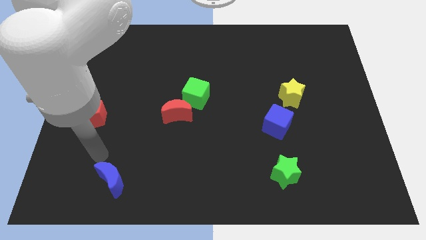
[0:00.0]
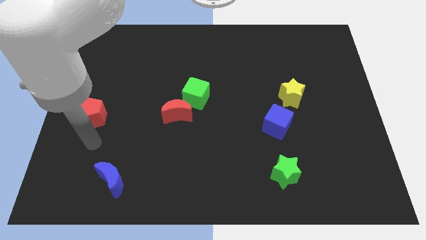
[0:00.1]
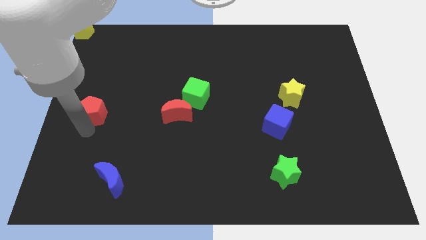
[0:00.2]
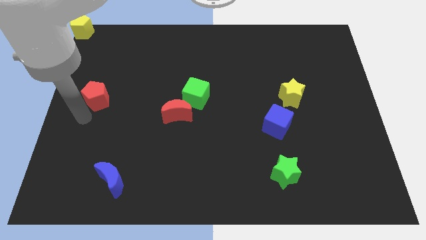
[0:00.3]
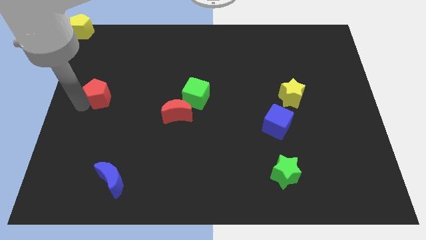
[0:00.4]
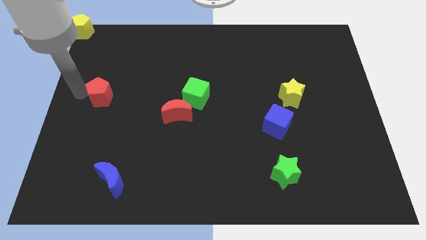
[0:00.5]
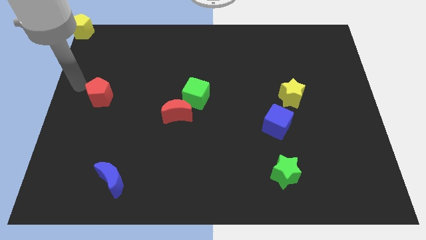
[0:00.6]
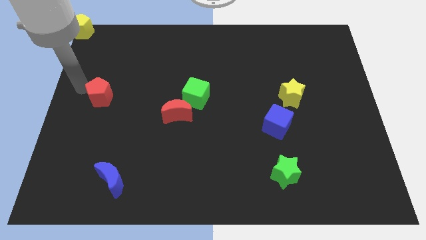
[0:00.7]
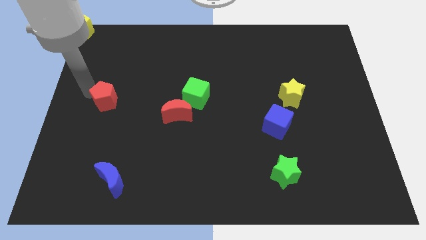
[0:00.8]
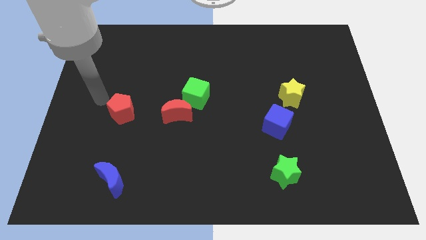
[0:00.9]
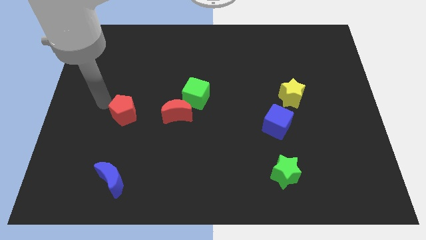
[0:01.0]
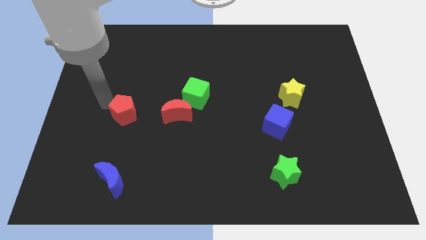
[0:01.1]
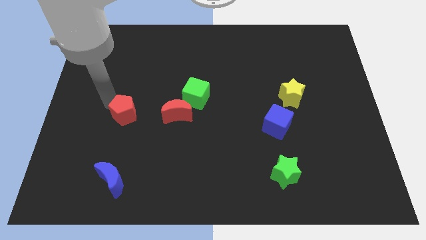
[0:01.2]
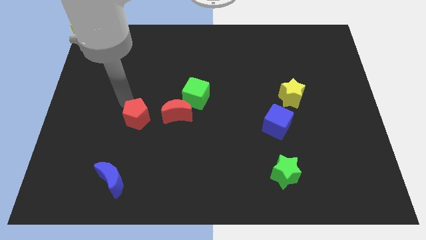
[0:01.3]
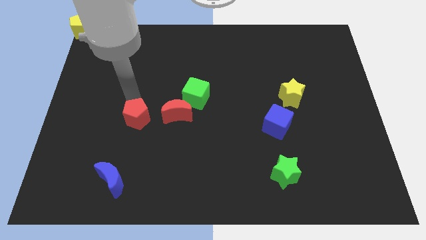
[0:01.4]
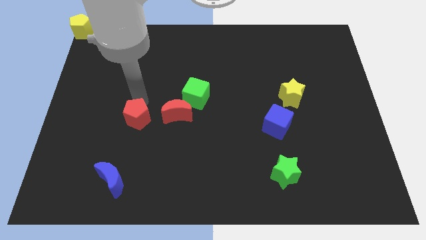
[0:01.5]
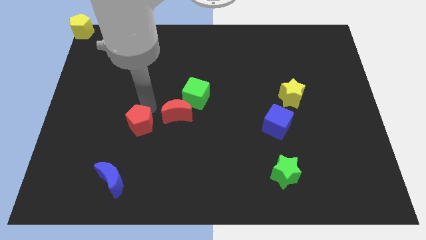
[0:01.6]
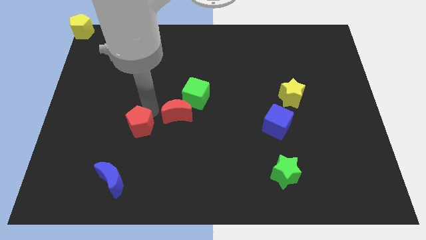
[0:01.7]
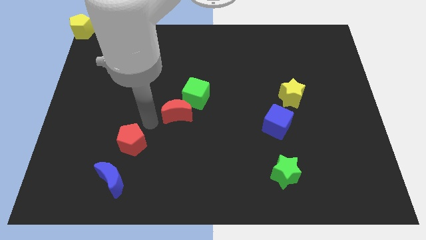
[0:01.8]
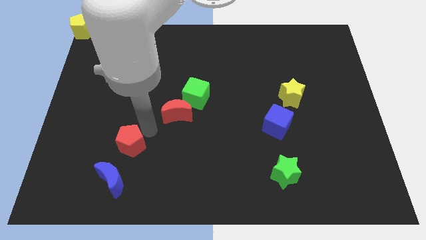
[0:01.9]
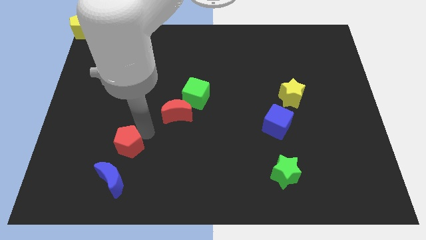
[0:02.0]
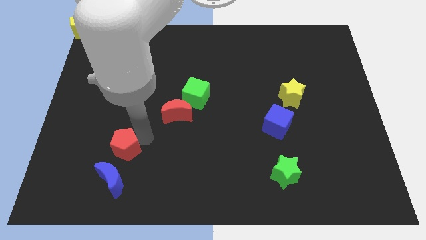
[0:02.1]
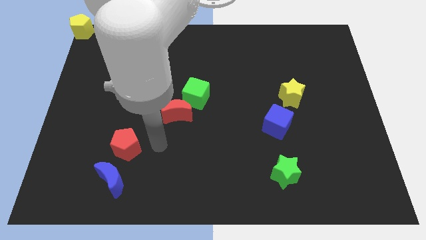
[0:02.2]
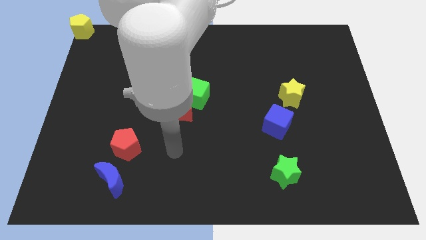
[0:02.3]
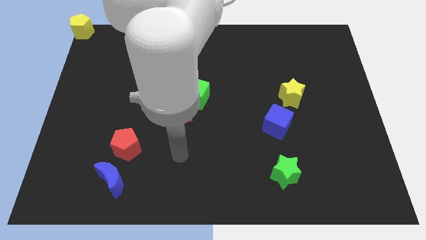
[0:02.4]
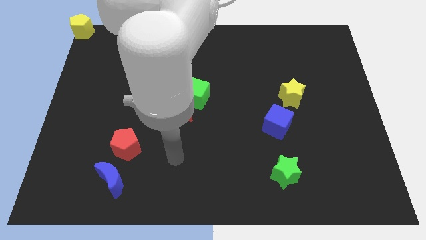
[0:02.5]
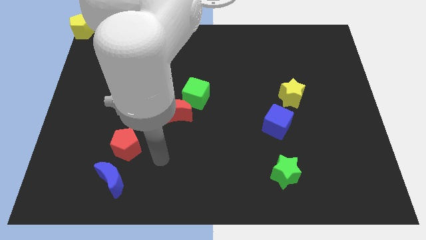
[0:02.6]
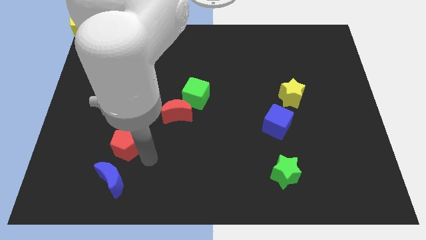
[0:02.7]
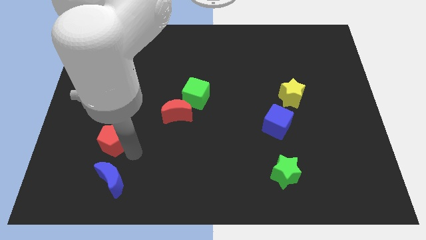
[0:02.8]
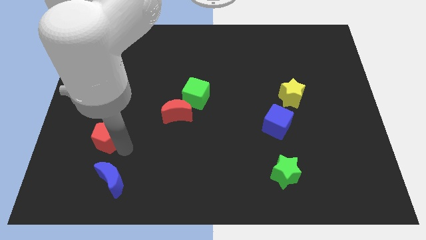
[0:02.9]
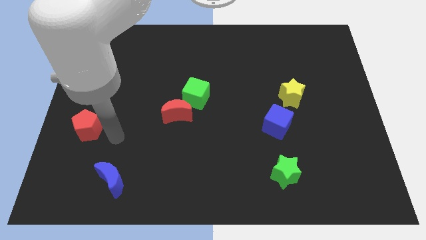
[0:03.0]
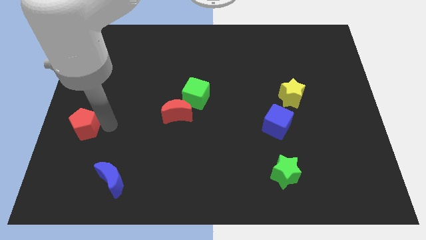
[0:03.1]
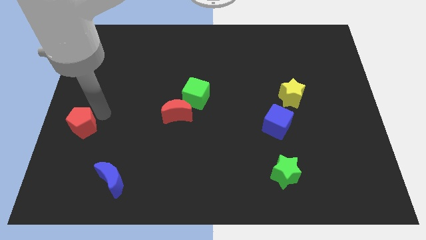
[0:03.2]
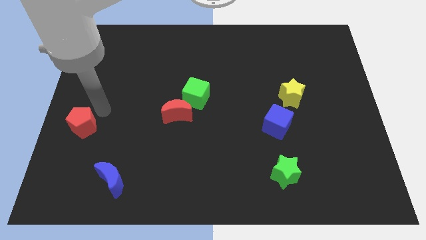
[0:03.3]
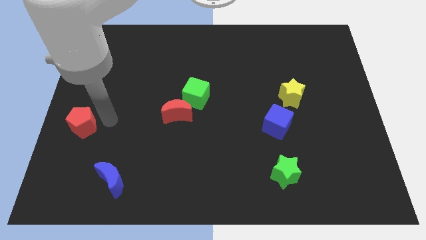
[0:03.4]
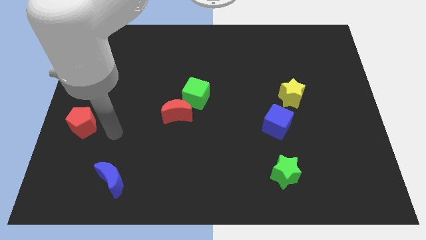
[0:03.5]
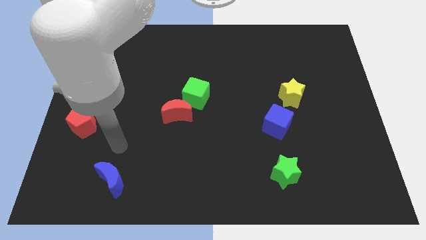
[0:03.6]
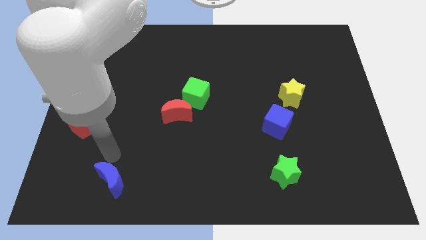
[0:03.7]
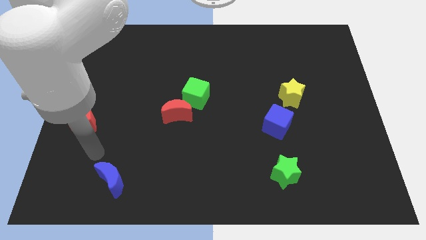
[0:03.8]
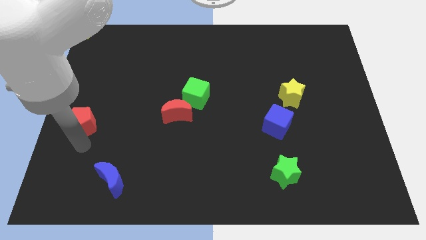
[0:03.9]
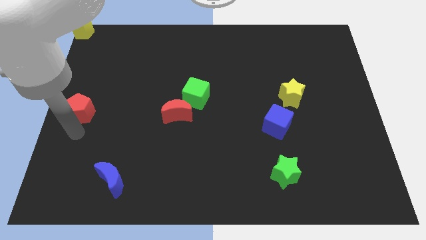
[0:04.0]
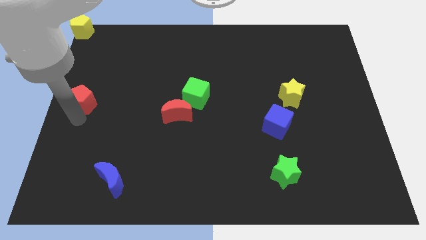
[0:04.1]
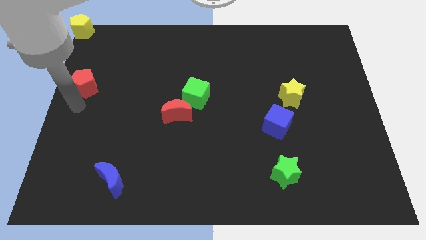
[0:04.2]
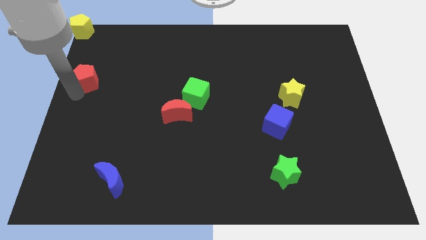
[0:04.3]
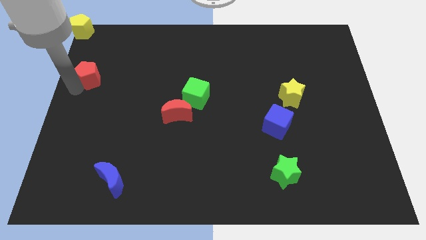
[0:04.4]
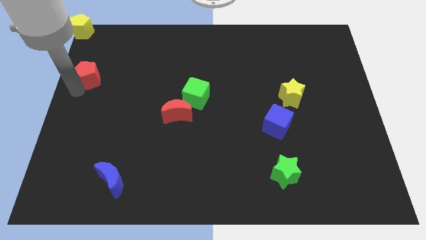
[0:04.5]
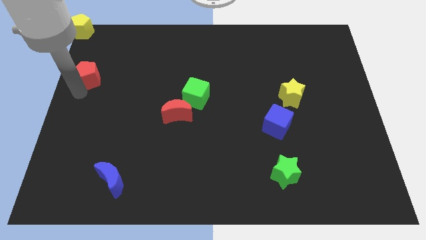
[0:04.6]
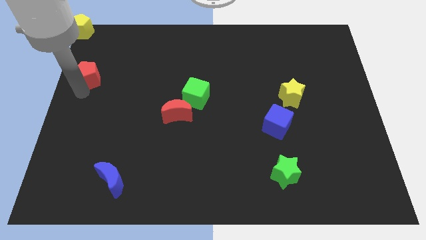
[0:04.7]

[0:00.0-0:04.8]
move the red pentagon to the top left of the red crescent

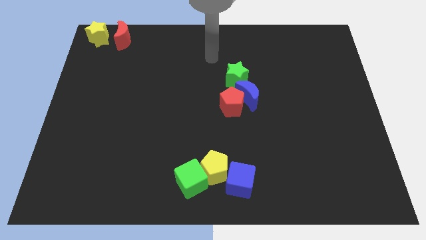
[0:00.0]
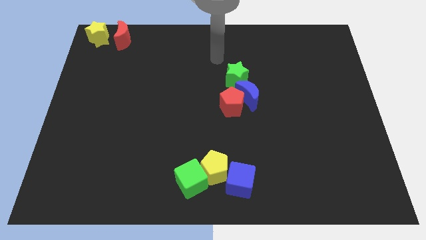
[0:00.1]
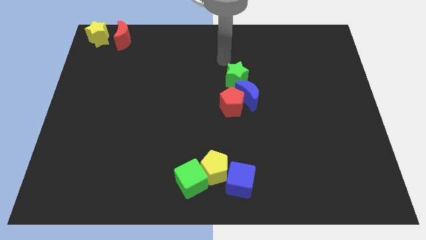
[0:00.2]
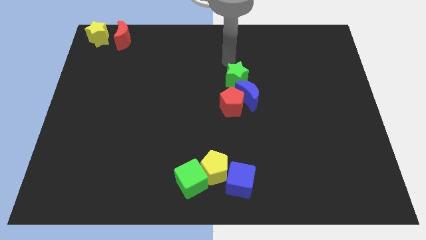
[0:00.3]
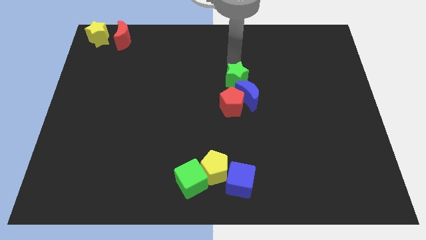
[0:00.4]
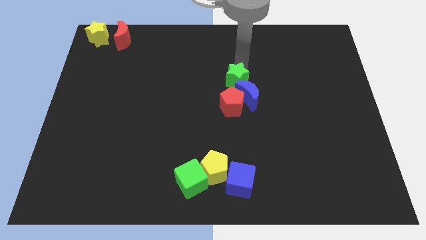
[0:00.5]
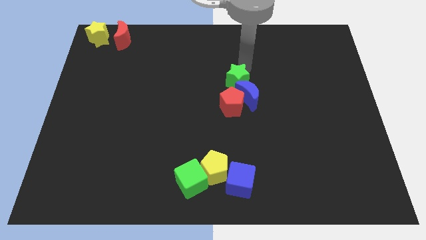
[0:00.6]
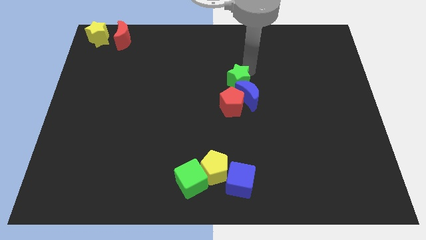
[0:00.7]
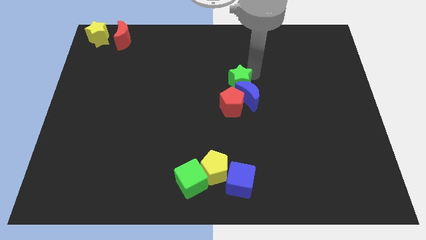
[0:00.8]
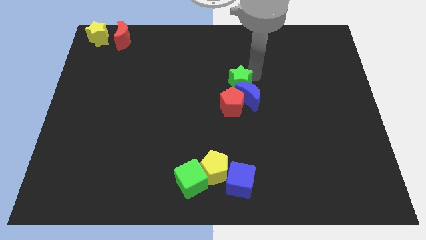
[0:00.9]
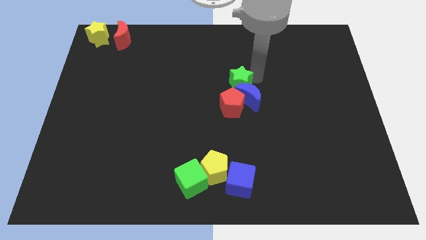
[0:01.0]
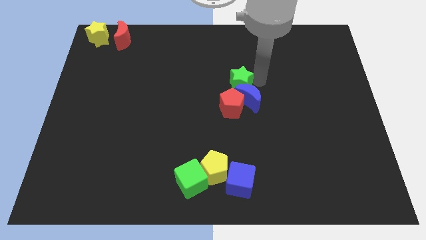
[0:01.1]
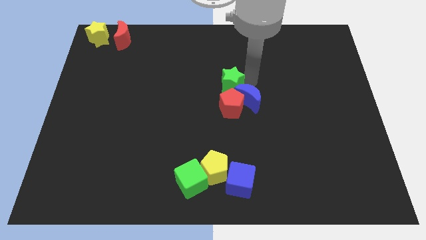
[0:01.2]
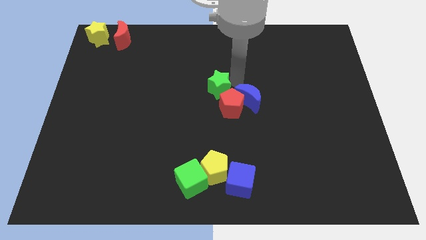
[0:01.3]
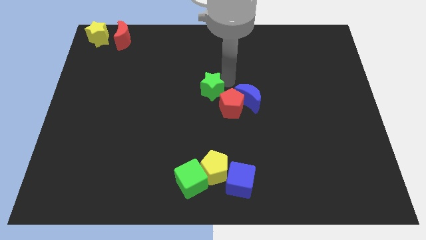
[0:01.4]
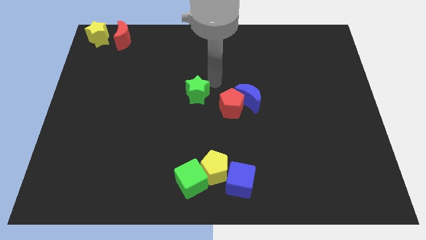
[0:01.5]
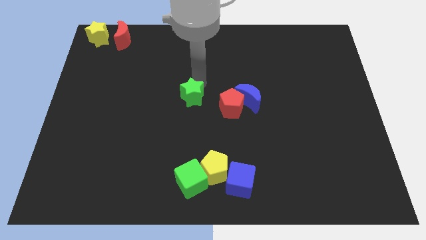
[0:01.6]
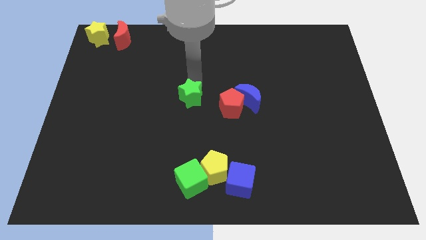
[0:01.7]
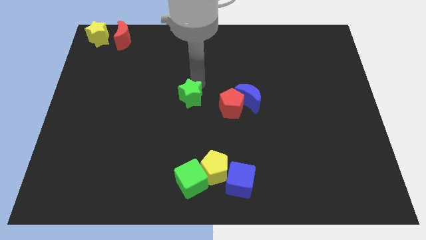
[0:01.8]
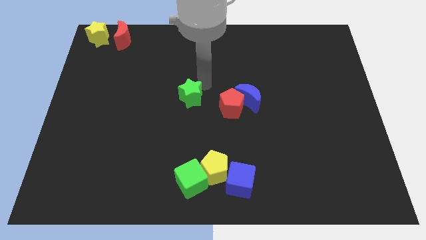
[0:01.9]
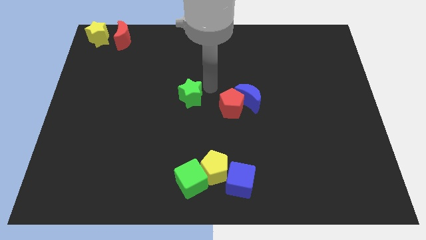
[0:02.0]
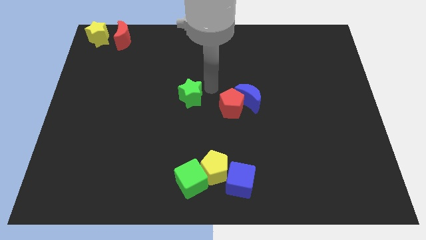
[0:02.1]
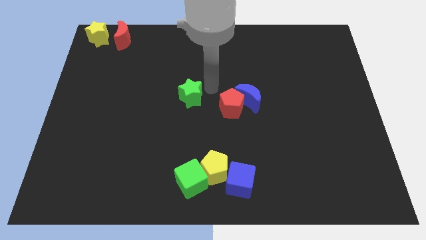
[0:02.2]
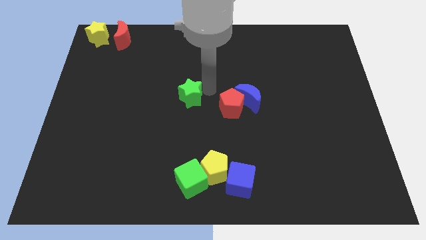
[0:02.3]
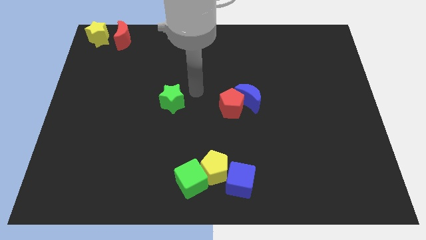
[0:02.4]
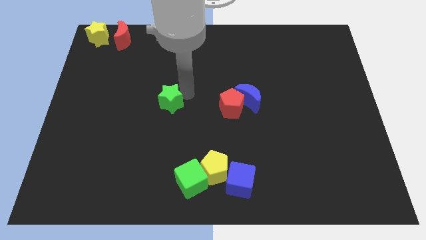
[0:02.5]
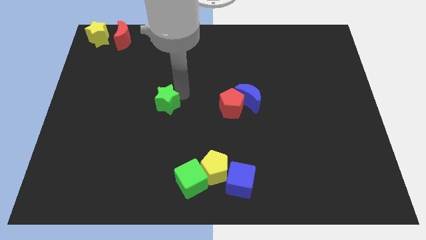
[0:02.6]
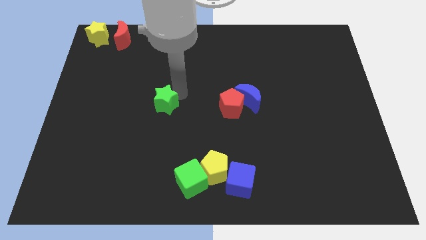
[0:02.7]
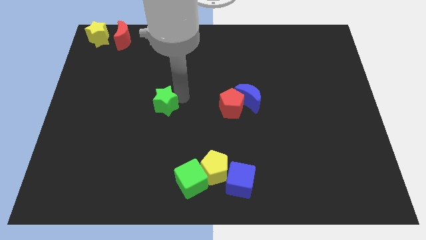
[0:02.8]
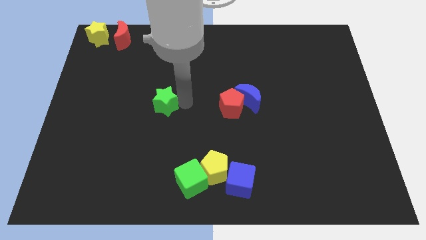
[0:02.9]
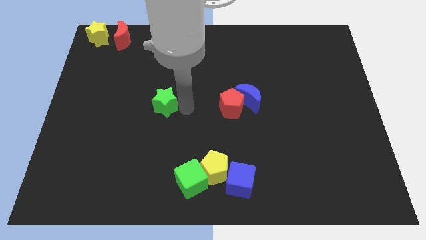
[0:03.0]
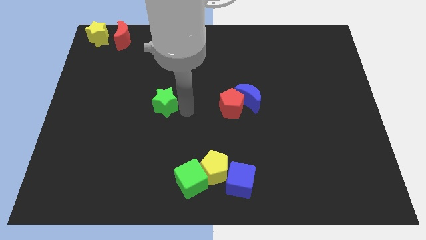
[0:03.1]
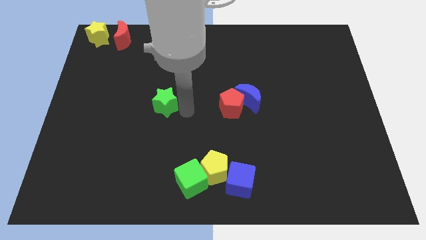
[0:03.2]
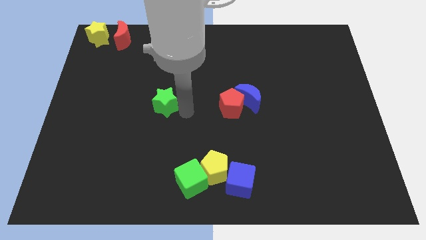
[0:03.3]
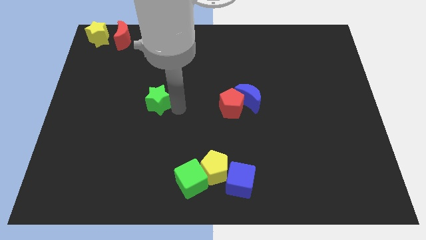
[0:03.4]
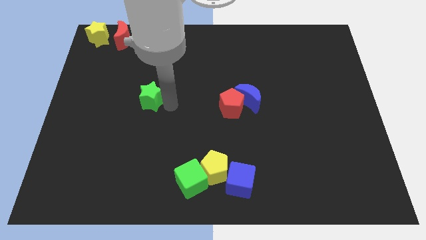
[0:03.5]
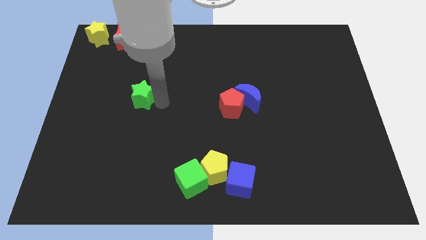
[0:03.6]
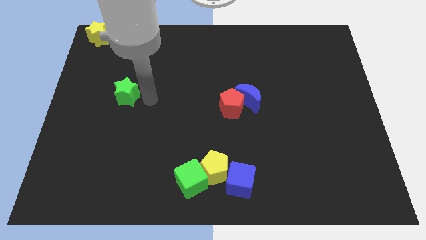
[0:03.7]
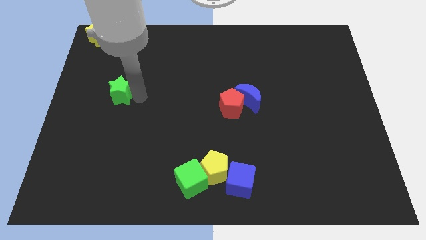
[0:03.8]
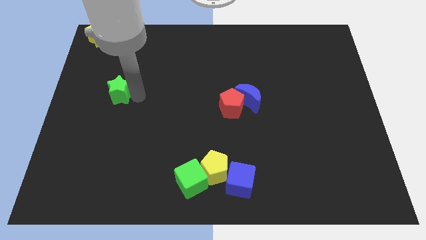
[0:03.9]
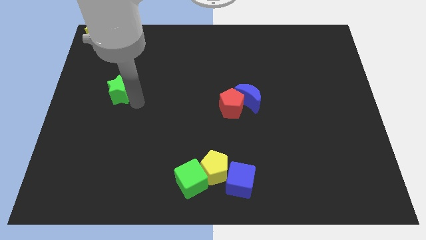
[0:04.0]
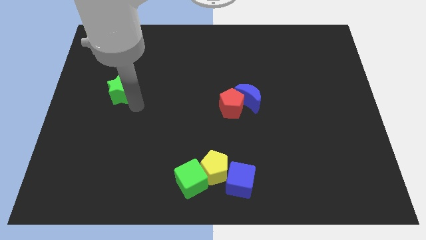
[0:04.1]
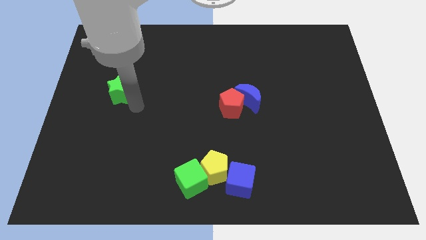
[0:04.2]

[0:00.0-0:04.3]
push the green star to the vertical bottom side of the red moon
